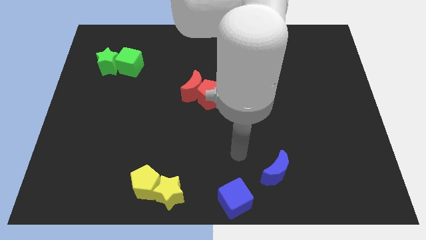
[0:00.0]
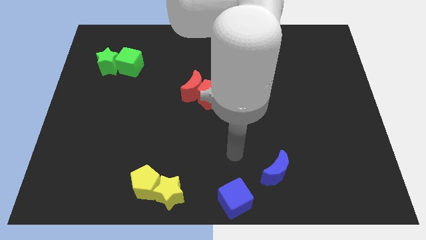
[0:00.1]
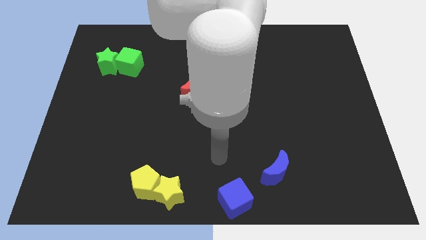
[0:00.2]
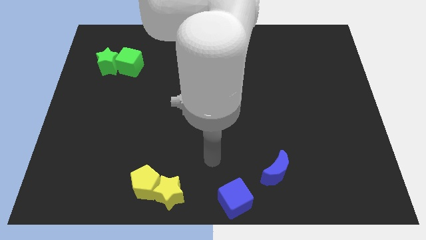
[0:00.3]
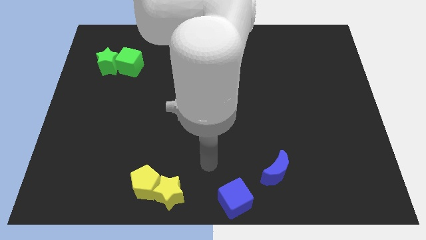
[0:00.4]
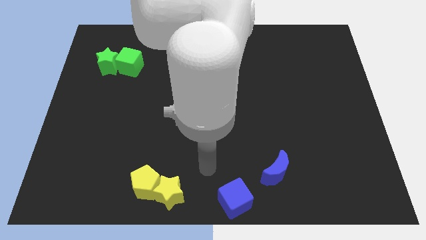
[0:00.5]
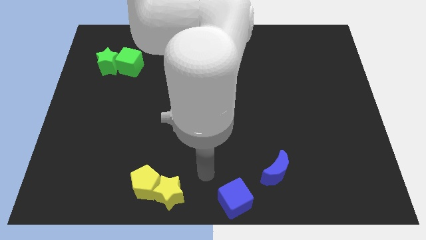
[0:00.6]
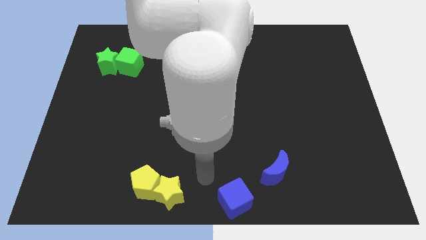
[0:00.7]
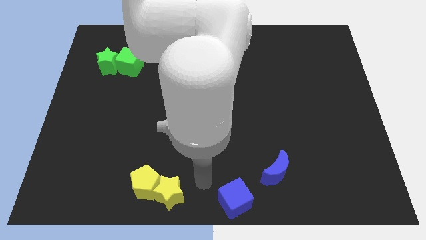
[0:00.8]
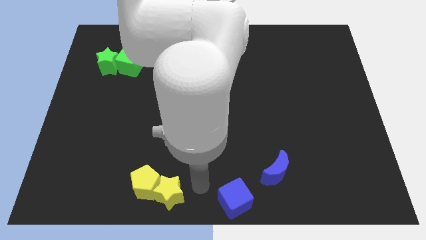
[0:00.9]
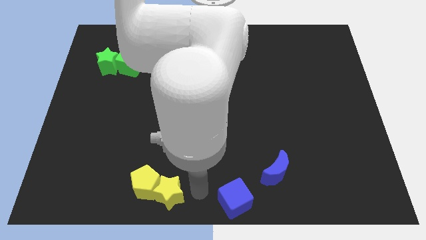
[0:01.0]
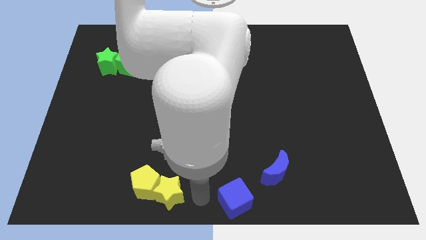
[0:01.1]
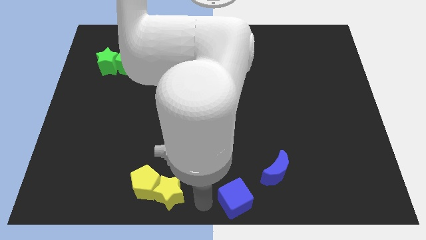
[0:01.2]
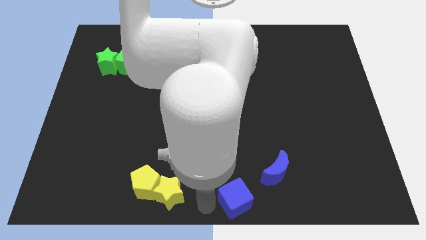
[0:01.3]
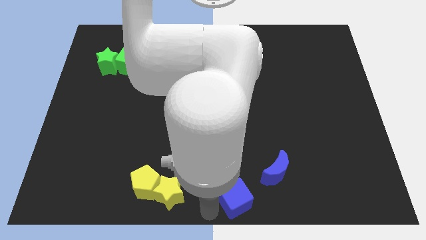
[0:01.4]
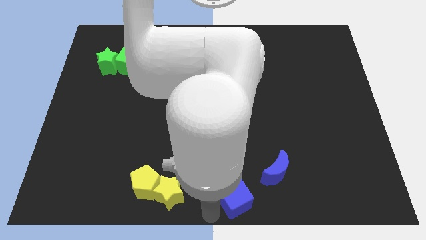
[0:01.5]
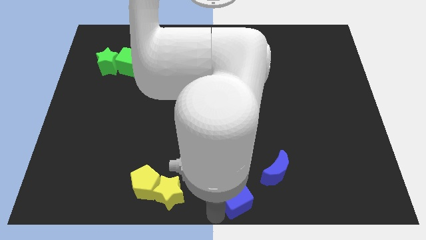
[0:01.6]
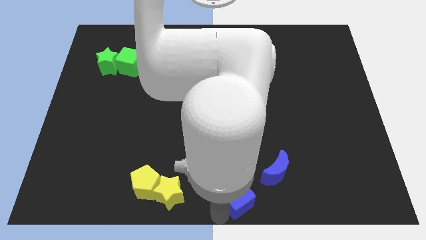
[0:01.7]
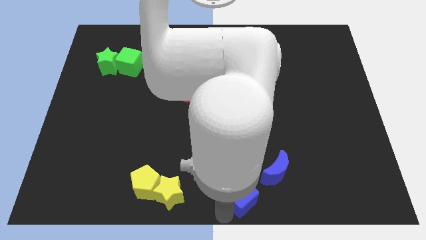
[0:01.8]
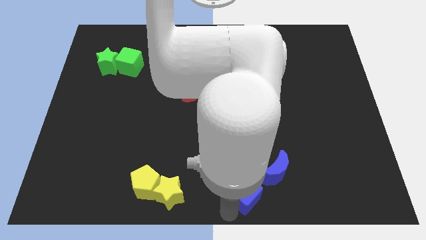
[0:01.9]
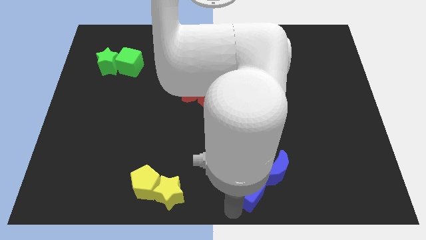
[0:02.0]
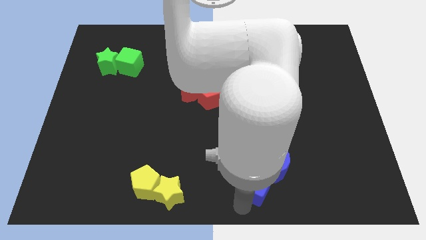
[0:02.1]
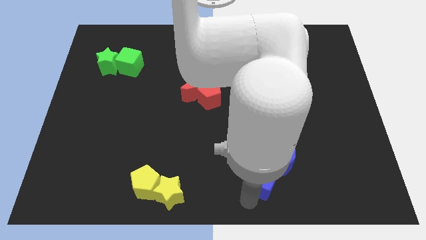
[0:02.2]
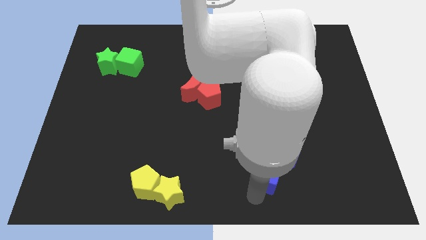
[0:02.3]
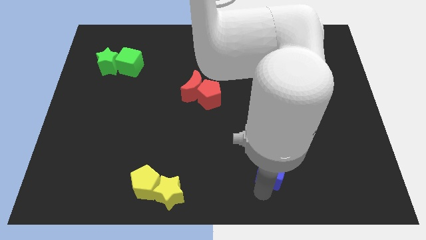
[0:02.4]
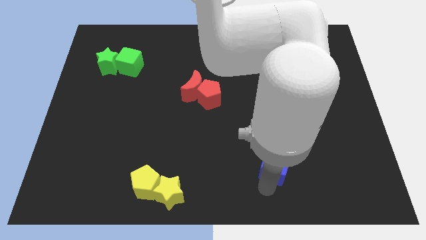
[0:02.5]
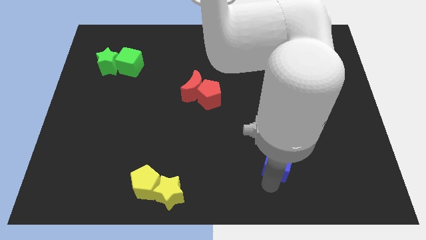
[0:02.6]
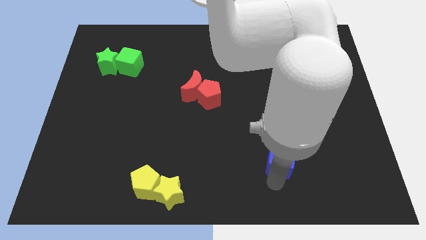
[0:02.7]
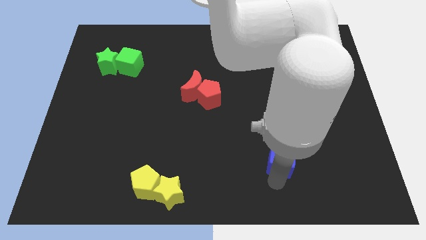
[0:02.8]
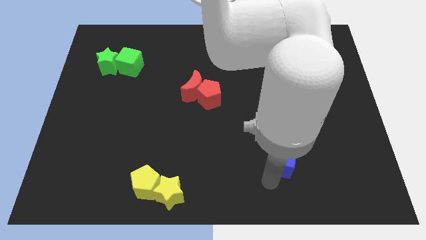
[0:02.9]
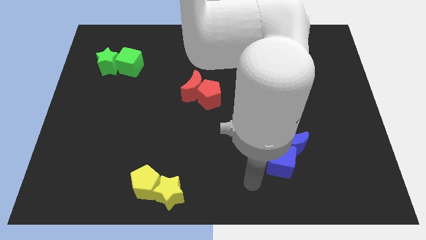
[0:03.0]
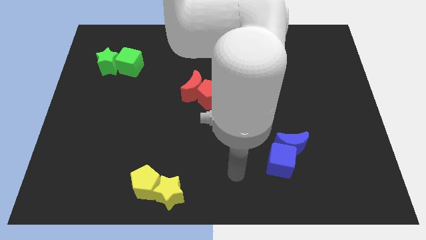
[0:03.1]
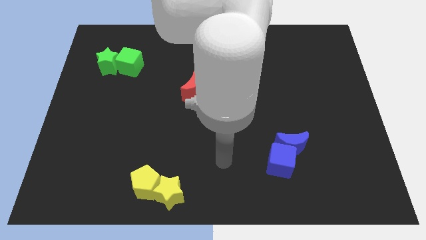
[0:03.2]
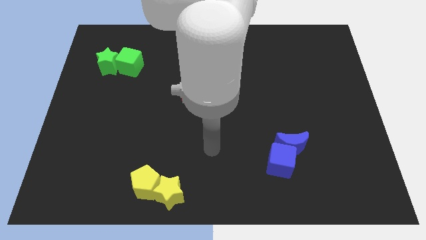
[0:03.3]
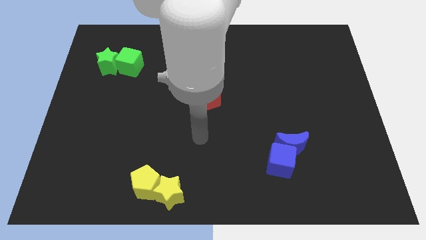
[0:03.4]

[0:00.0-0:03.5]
push the blue cube into the blue crescent

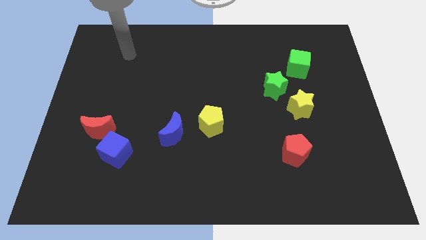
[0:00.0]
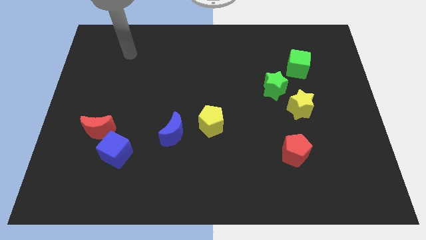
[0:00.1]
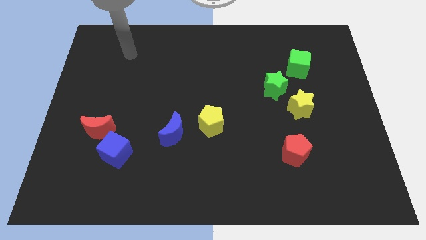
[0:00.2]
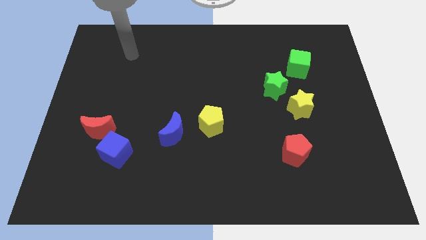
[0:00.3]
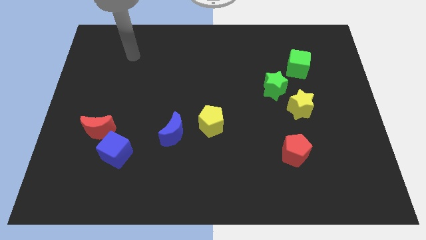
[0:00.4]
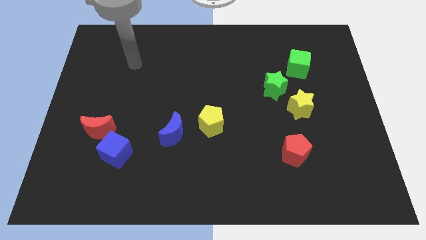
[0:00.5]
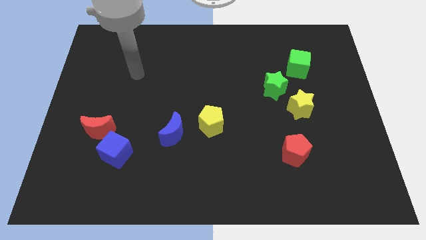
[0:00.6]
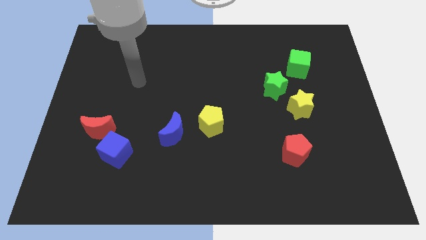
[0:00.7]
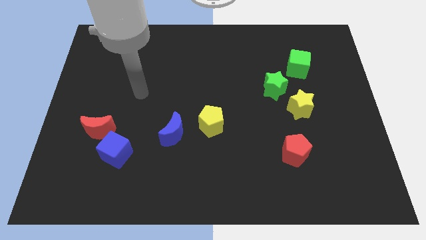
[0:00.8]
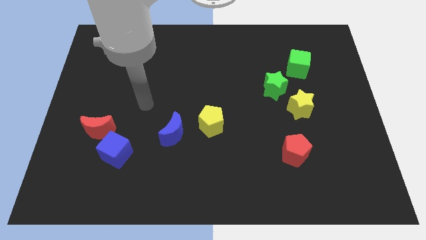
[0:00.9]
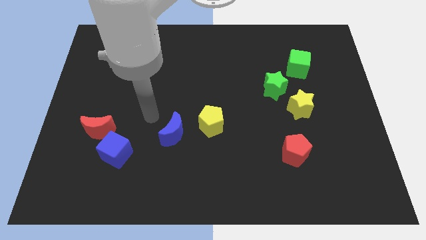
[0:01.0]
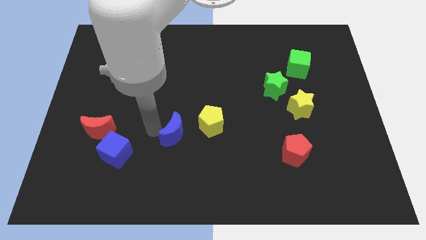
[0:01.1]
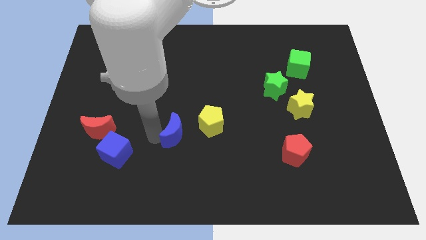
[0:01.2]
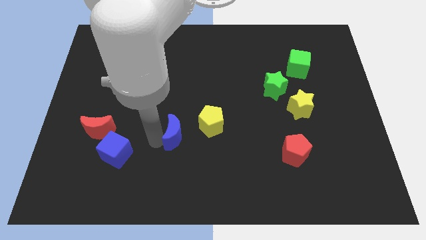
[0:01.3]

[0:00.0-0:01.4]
move the blue moon slightly downwards

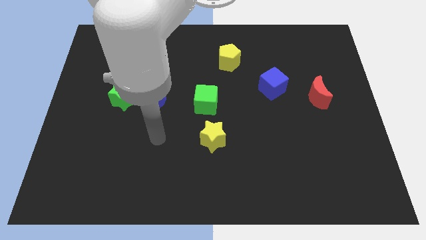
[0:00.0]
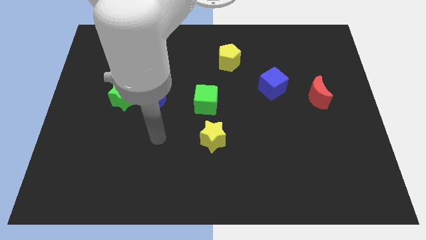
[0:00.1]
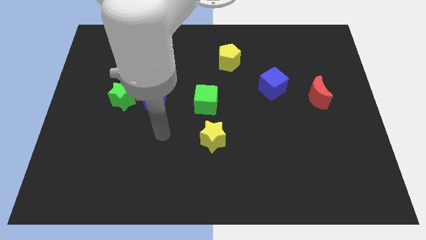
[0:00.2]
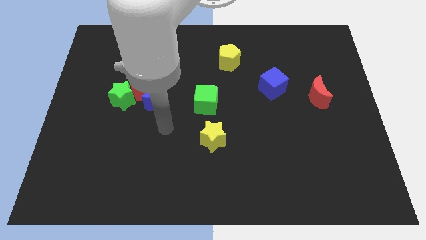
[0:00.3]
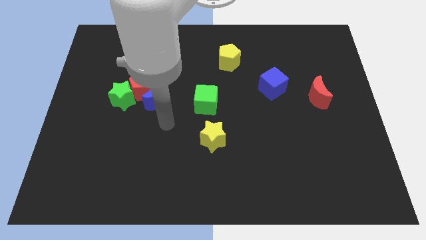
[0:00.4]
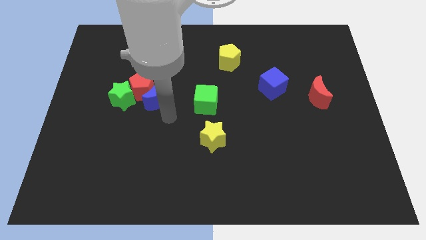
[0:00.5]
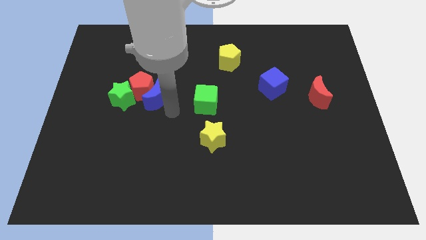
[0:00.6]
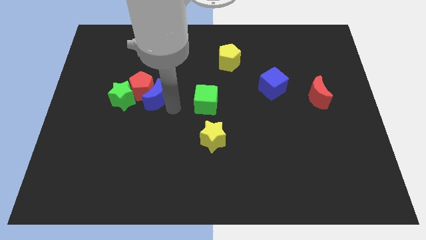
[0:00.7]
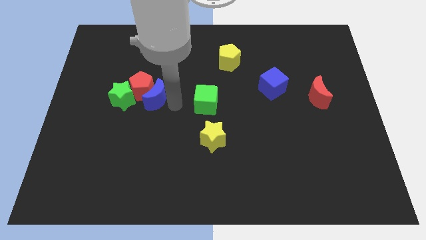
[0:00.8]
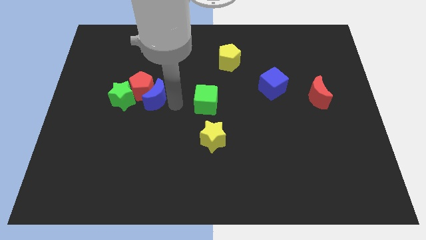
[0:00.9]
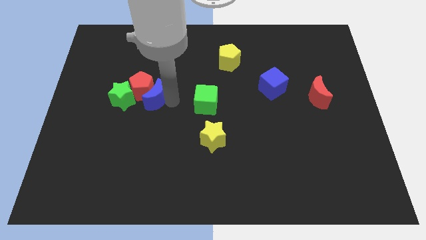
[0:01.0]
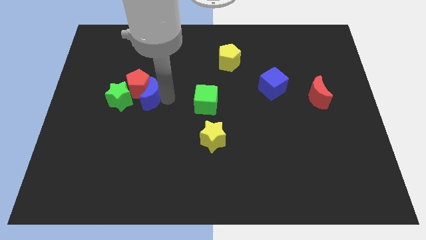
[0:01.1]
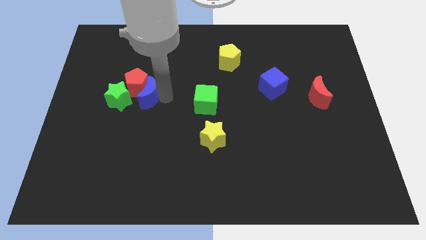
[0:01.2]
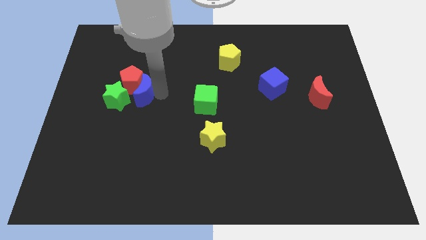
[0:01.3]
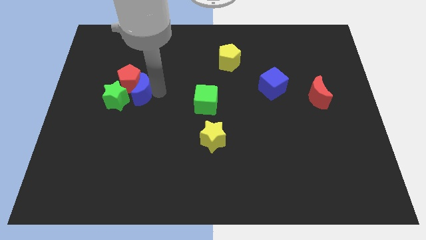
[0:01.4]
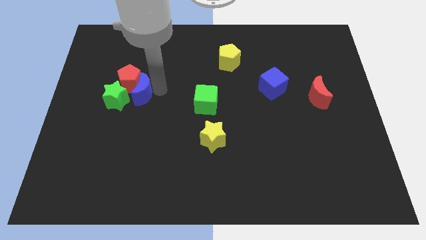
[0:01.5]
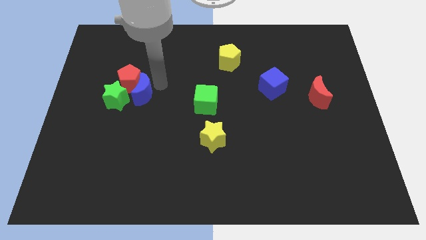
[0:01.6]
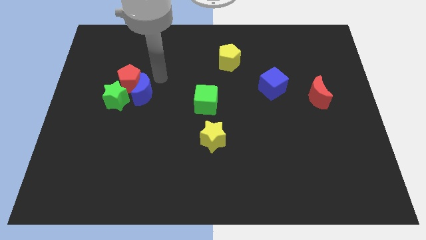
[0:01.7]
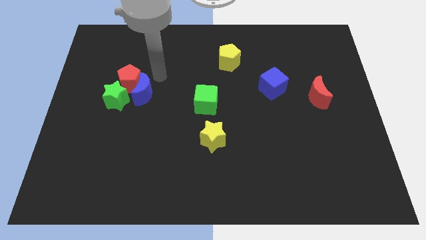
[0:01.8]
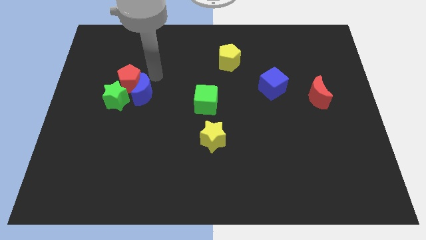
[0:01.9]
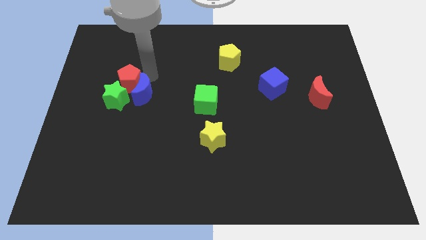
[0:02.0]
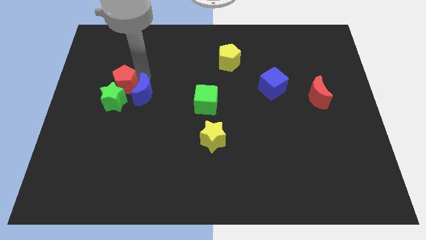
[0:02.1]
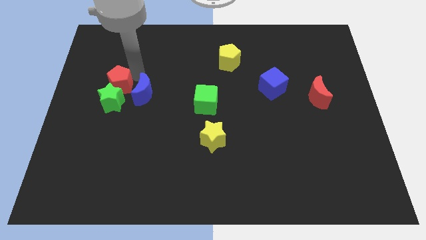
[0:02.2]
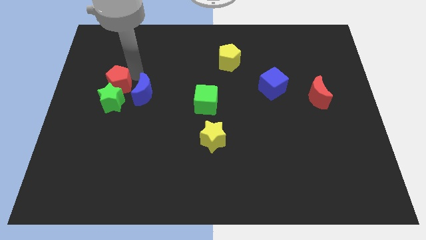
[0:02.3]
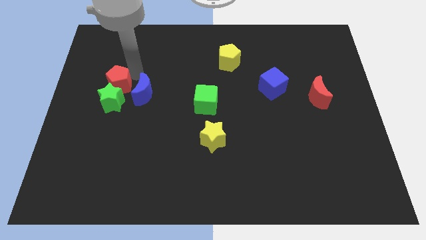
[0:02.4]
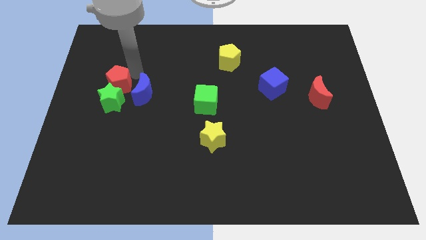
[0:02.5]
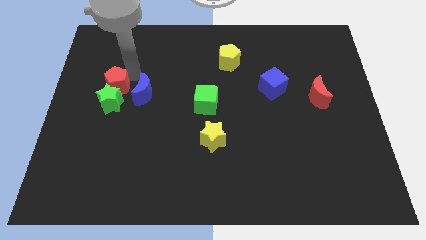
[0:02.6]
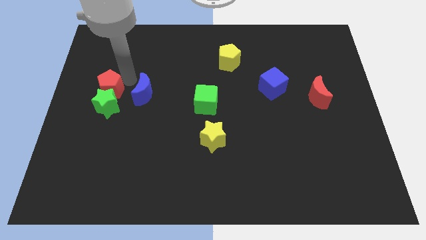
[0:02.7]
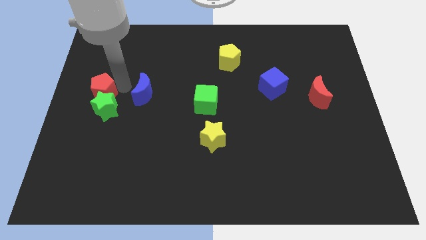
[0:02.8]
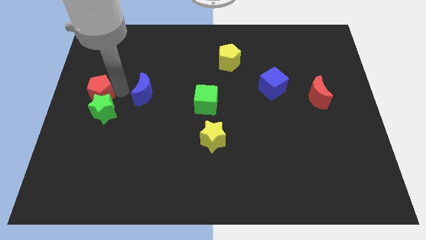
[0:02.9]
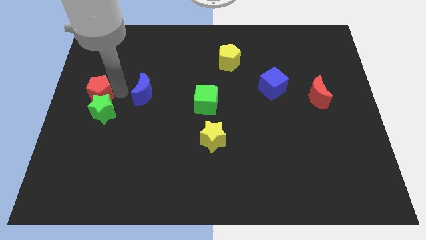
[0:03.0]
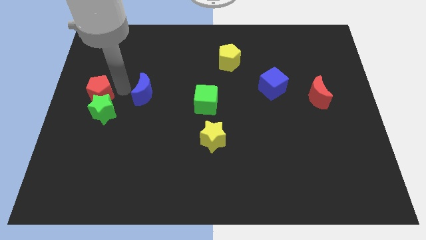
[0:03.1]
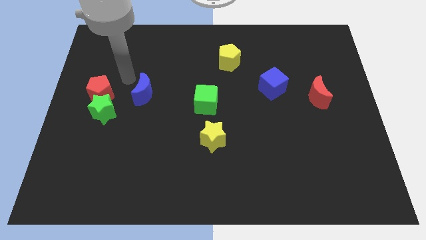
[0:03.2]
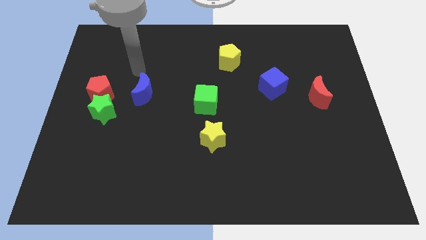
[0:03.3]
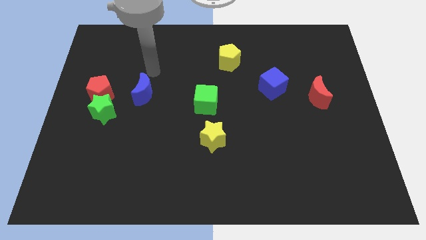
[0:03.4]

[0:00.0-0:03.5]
separate the blue crescent from the green star and the red pentagon

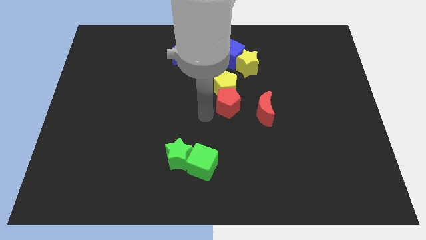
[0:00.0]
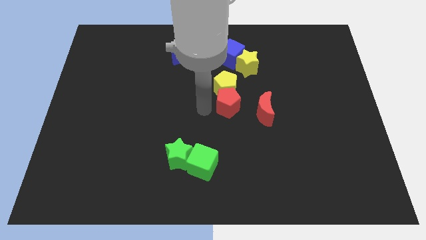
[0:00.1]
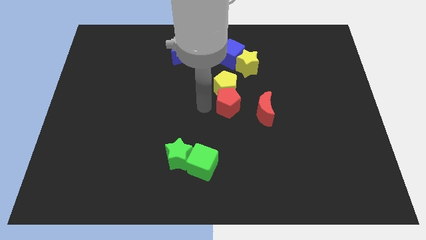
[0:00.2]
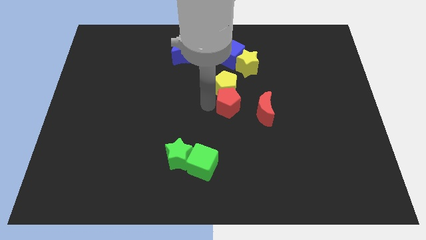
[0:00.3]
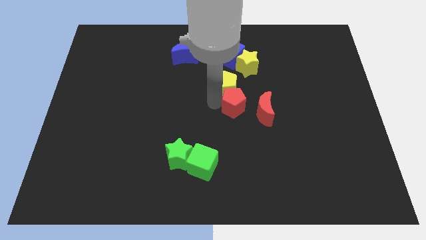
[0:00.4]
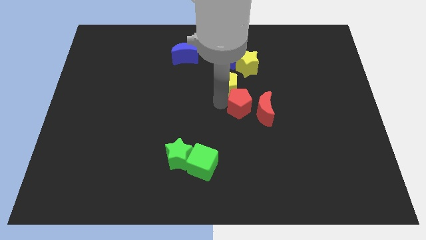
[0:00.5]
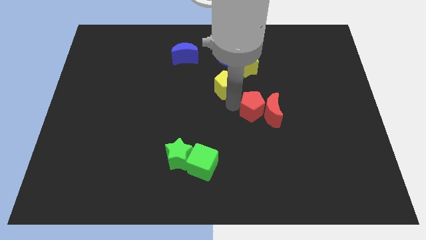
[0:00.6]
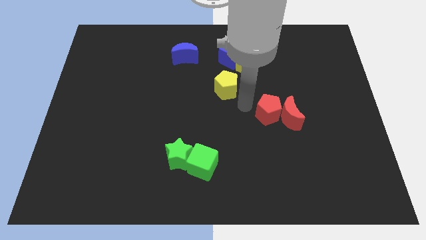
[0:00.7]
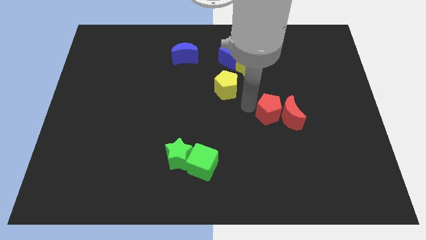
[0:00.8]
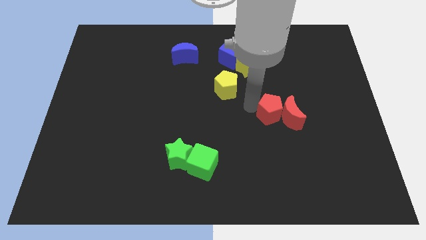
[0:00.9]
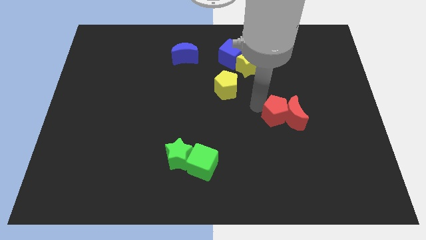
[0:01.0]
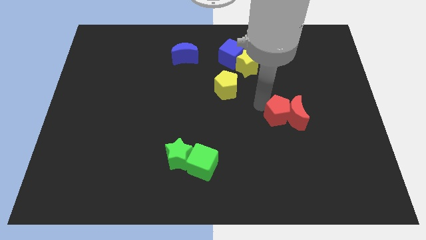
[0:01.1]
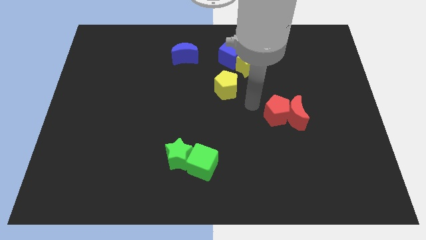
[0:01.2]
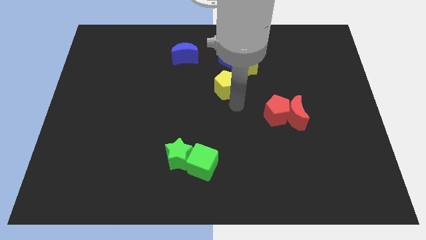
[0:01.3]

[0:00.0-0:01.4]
move the red blocks towards the center right
